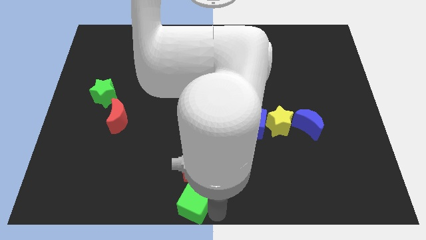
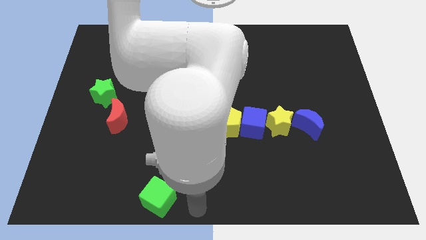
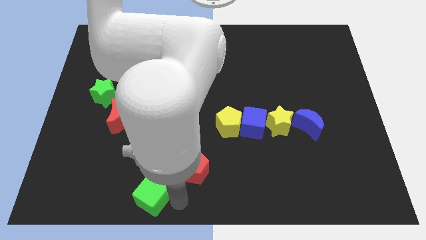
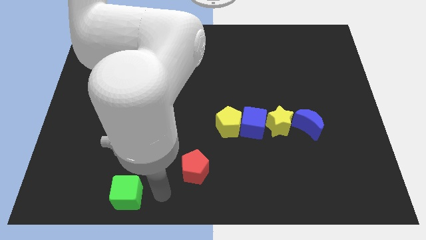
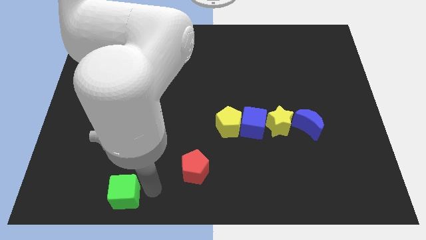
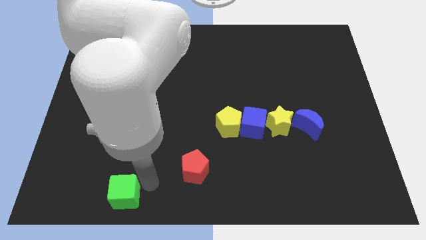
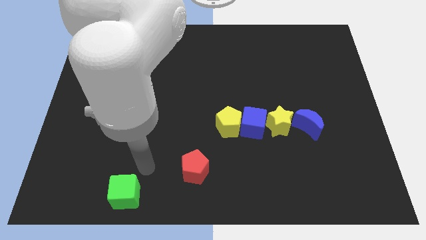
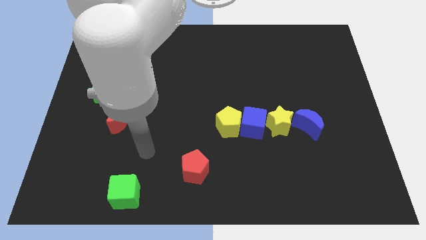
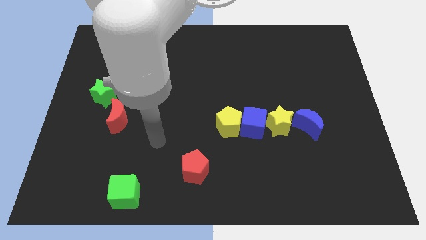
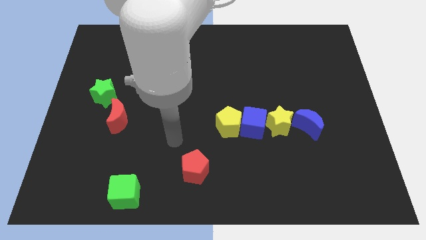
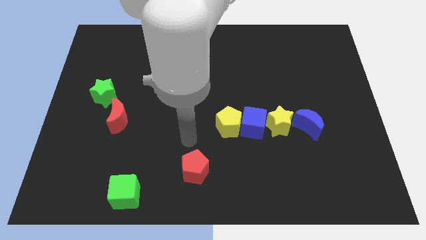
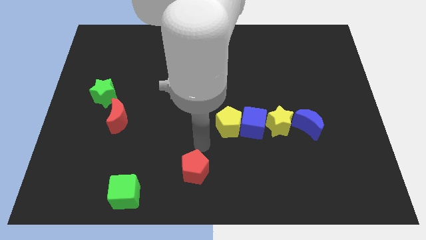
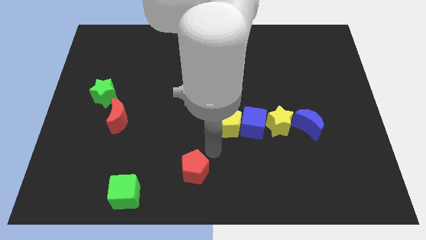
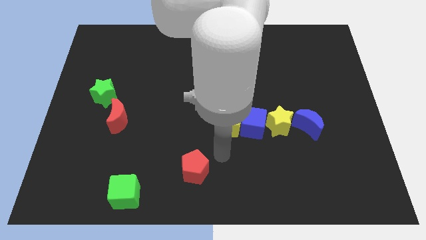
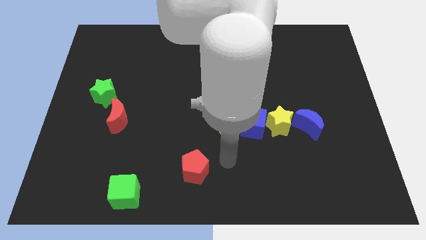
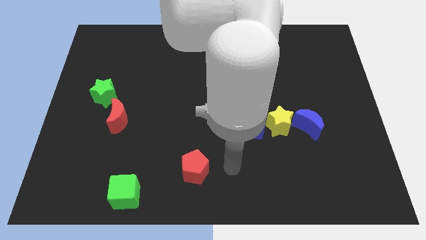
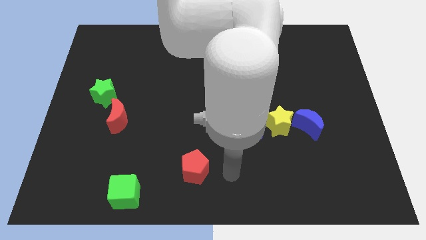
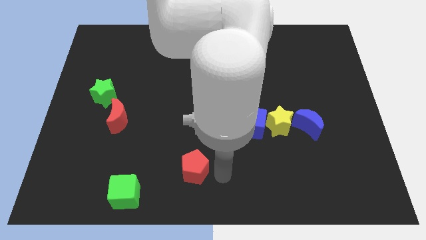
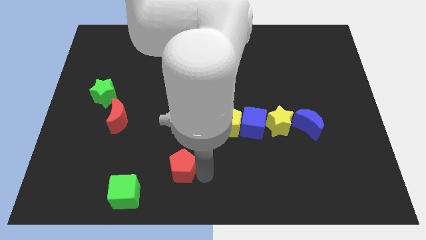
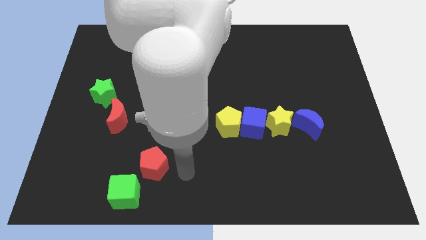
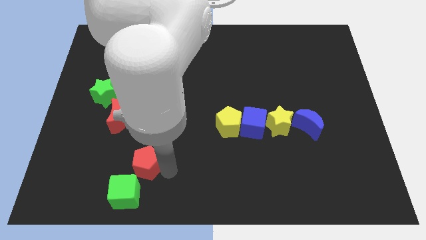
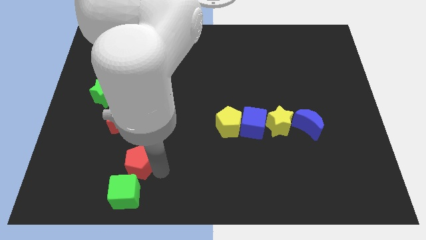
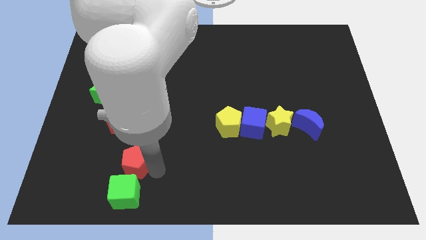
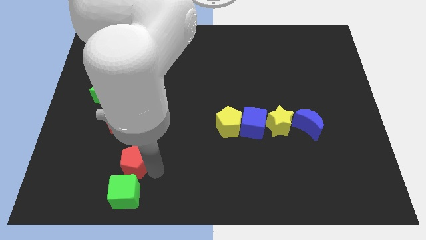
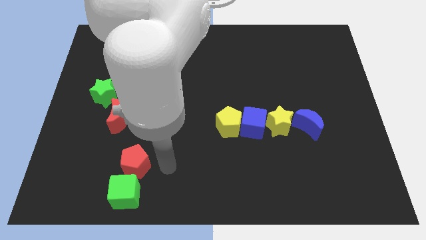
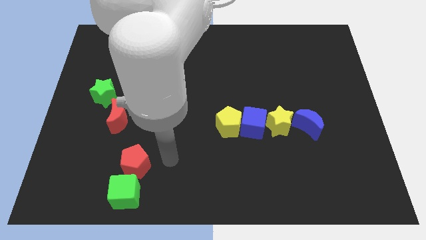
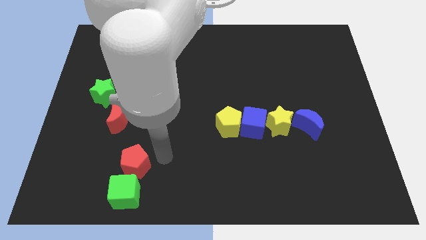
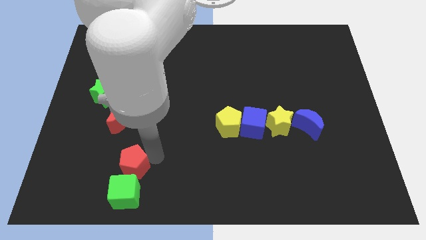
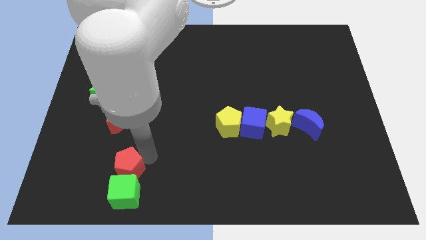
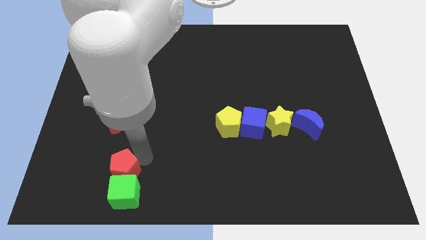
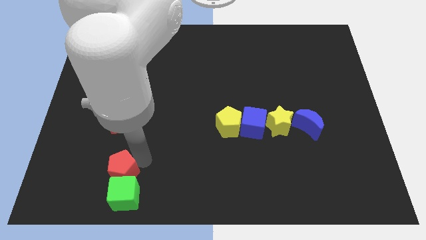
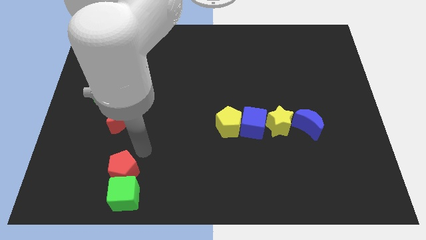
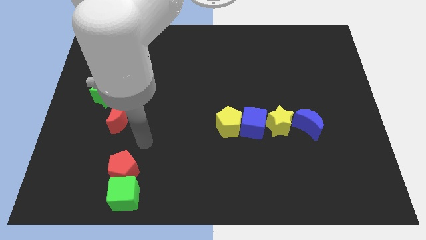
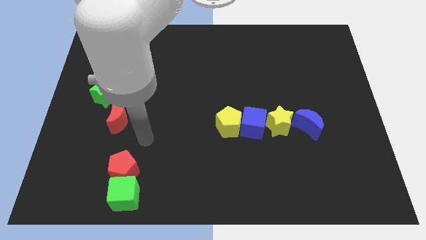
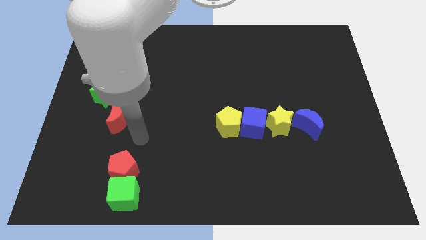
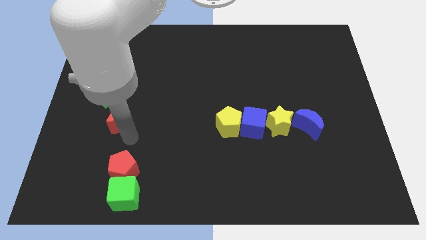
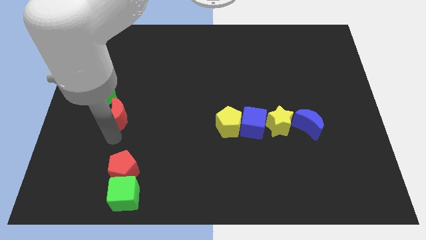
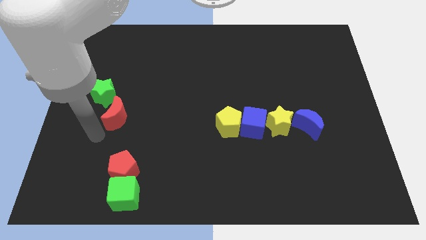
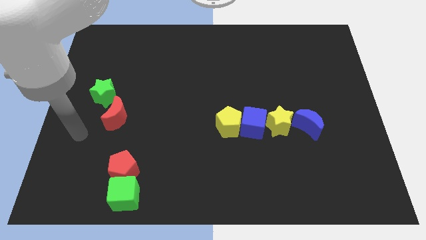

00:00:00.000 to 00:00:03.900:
push the green cube and red pentagon towards the left side of the board

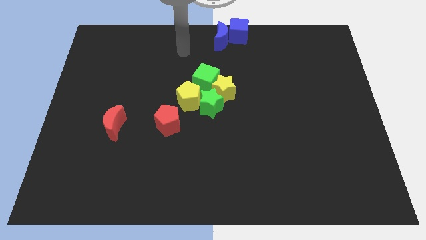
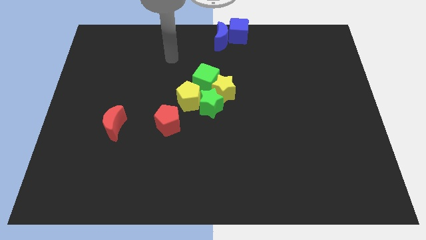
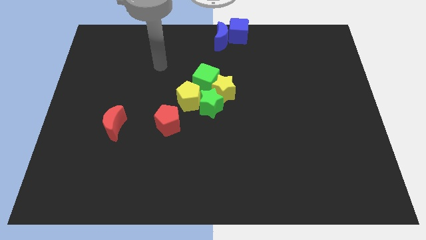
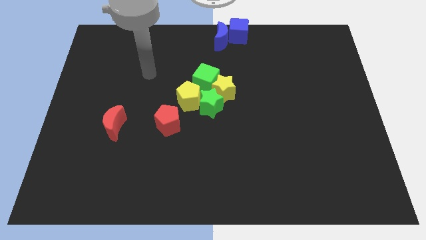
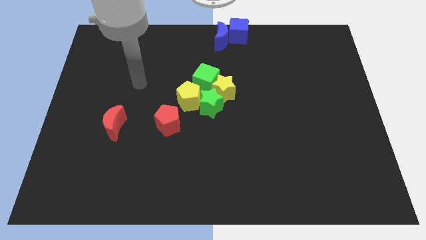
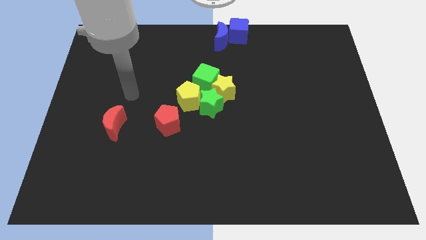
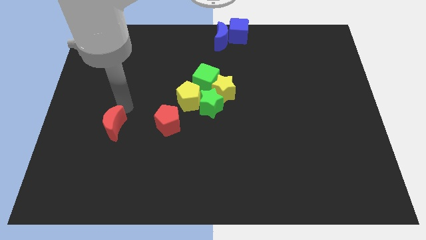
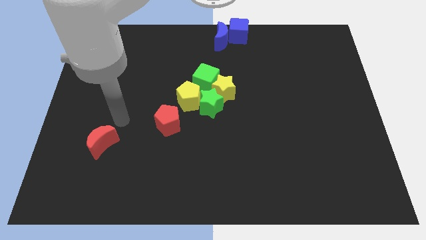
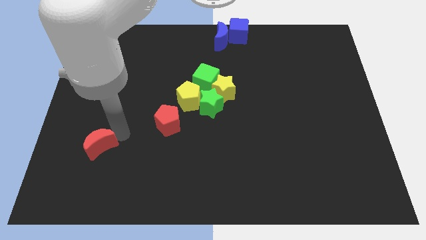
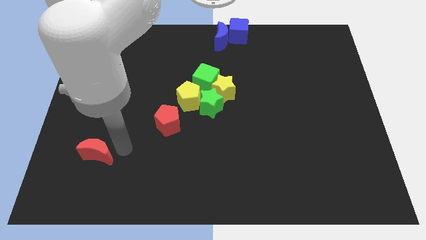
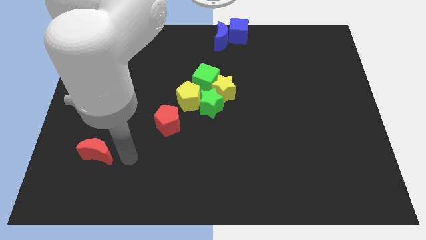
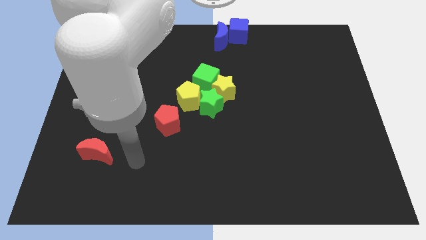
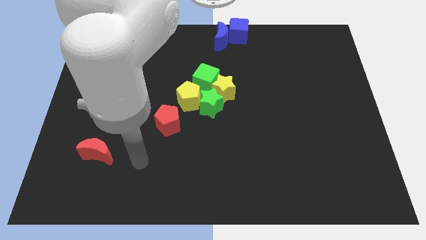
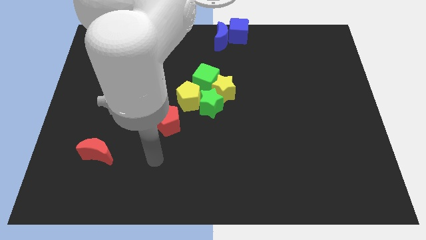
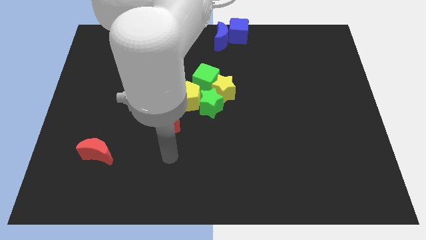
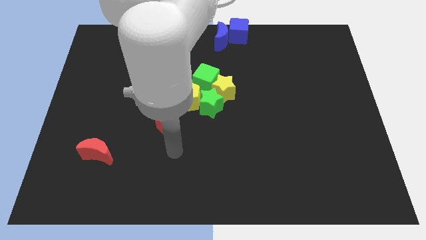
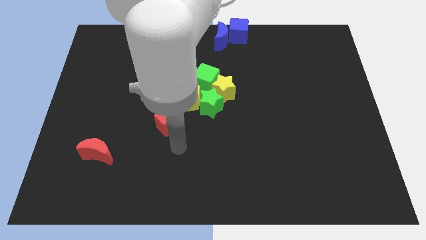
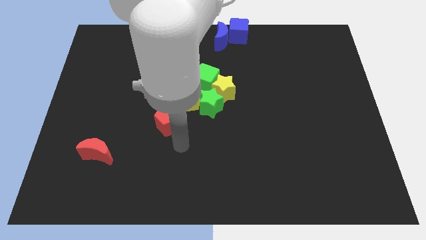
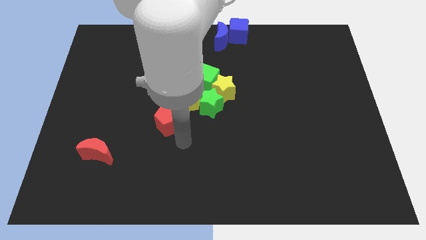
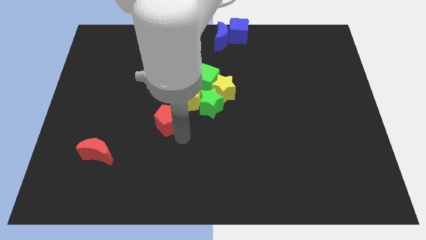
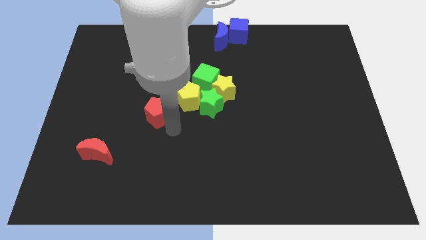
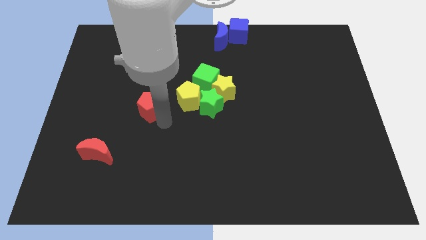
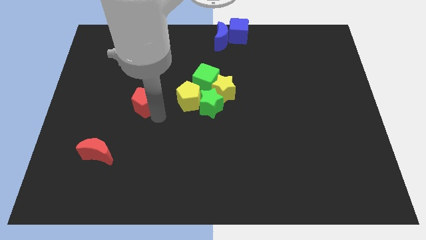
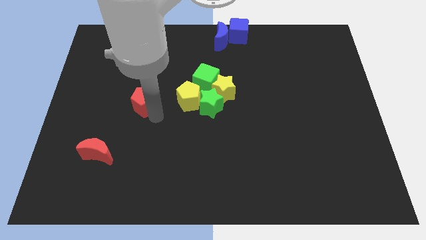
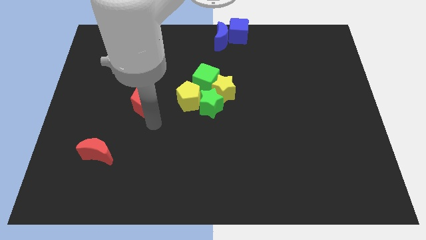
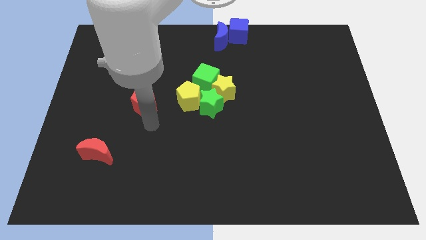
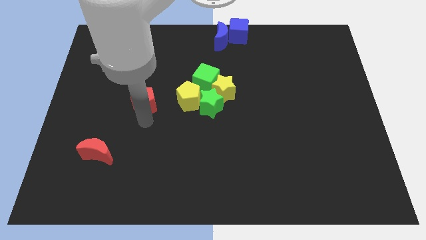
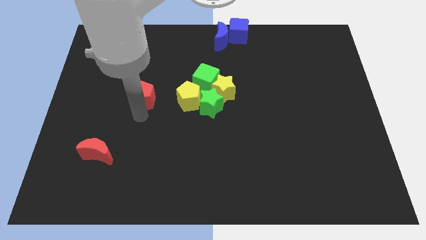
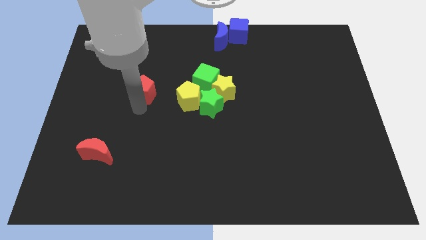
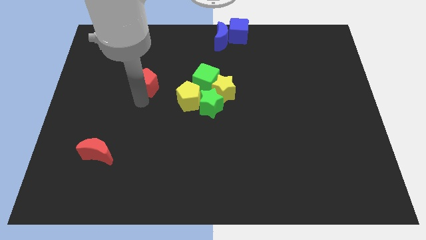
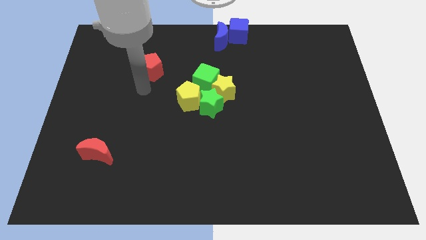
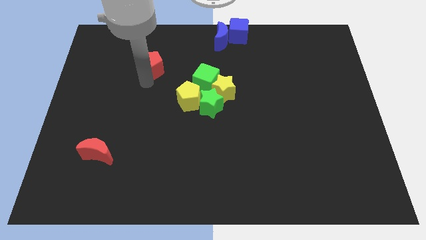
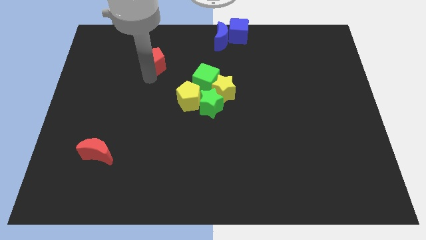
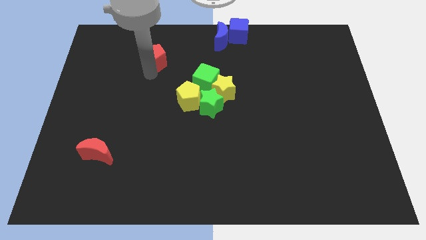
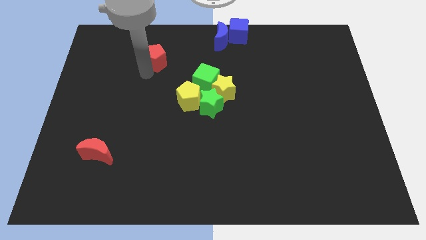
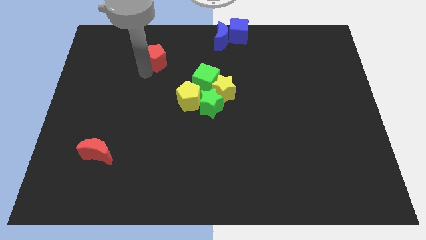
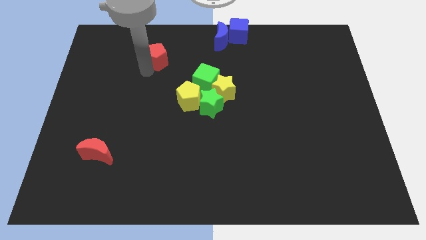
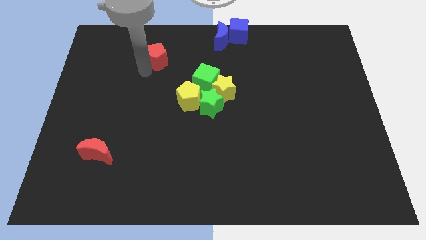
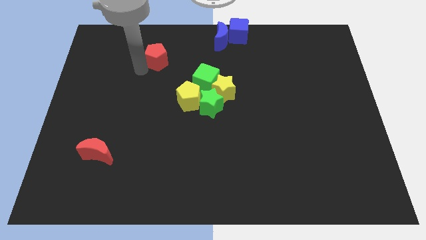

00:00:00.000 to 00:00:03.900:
move red pentagon parallel to the left of the green cube

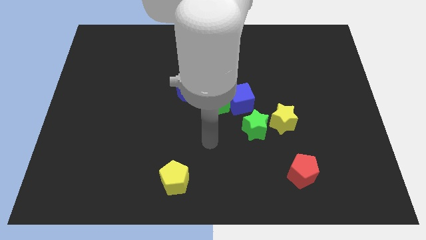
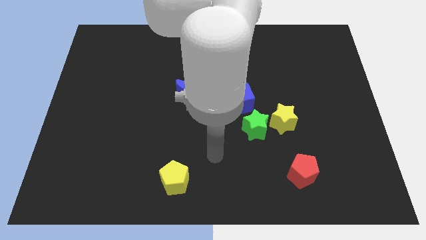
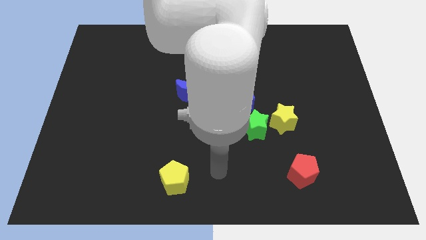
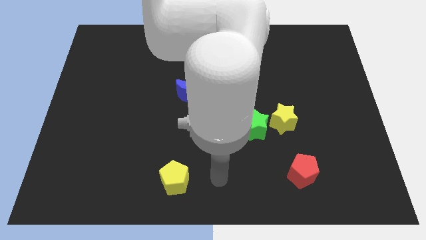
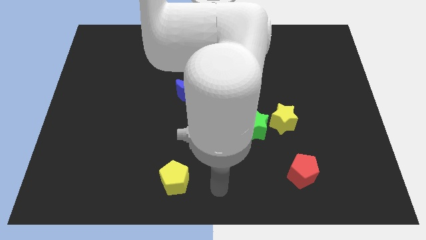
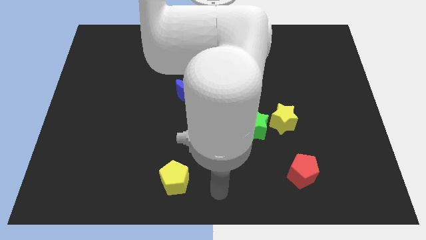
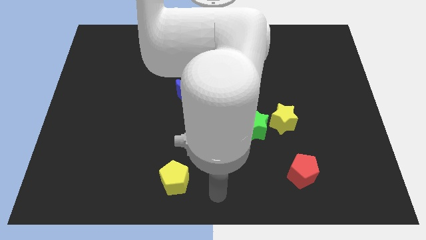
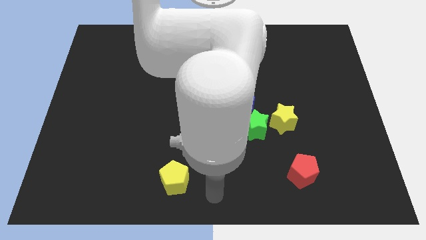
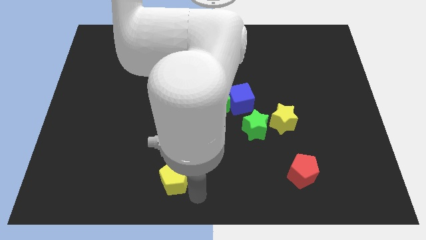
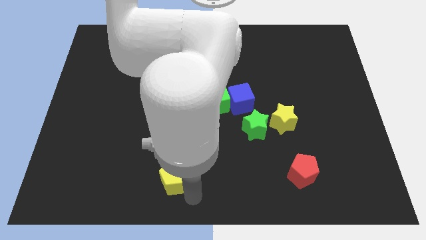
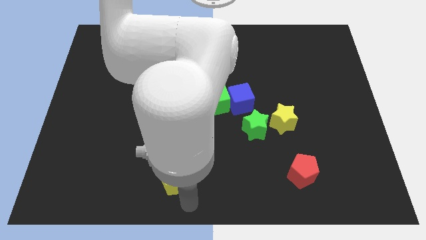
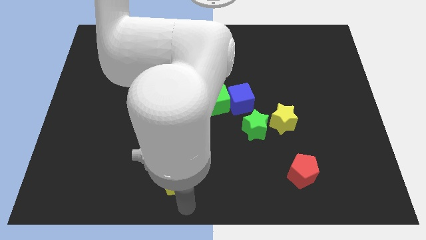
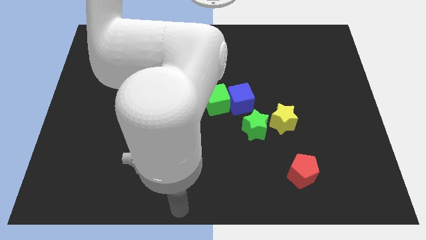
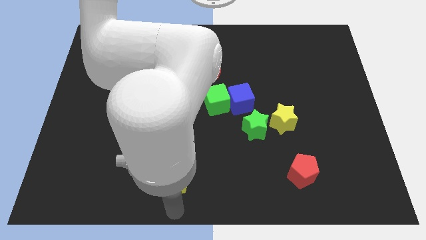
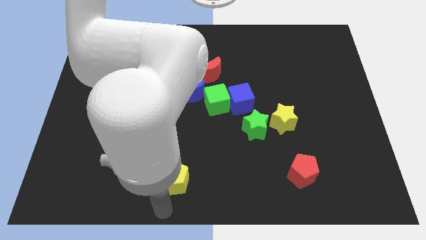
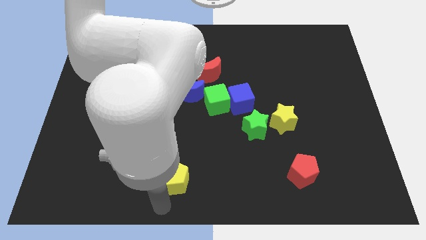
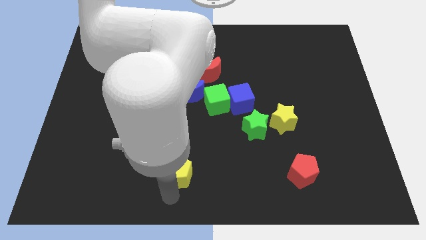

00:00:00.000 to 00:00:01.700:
place the arm down to the yellow pentagon
